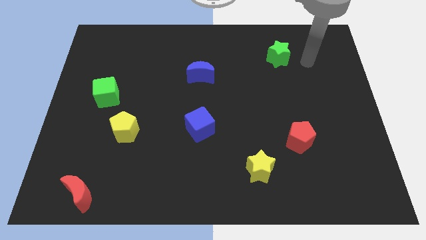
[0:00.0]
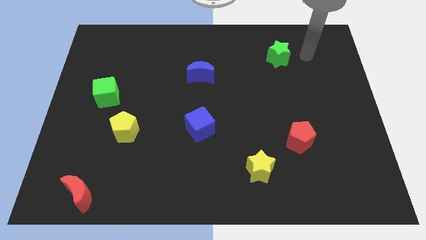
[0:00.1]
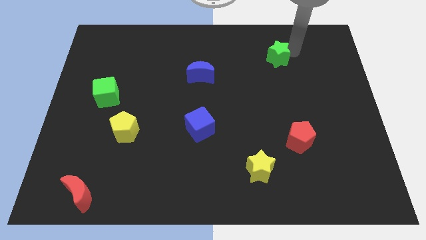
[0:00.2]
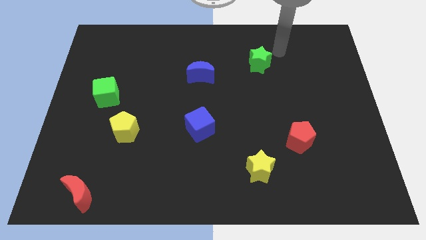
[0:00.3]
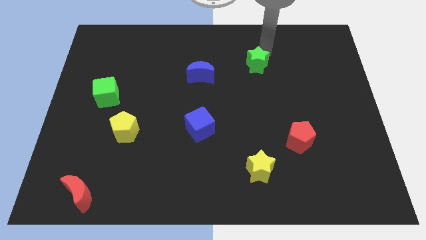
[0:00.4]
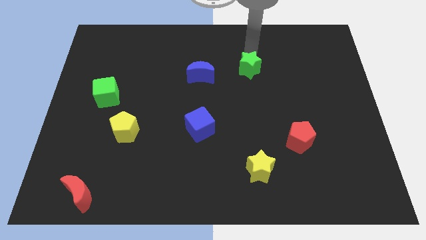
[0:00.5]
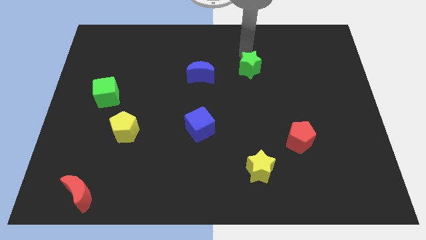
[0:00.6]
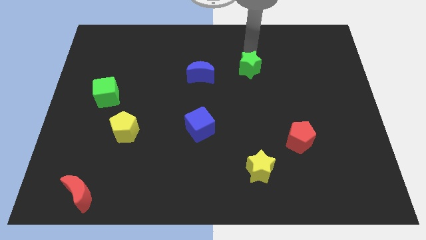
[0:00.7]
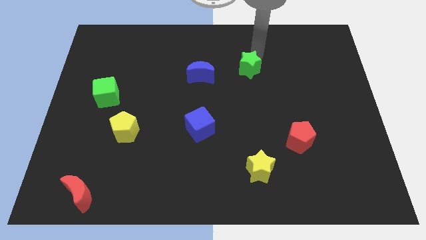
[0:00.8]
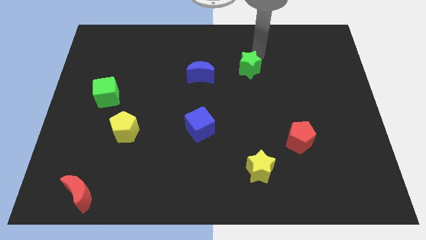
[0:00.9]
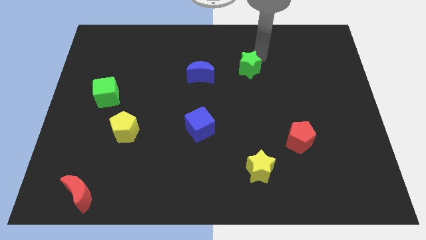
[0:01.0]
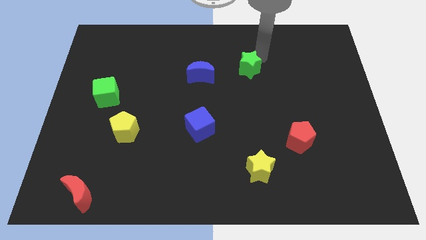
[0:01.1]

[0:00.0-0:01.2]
move green star slightly left

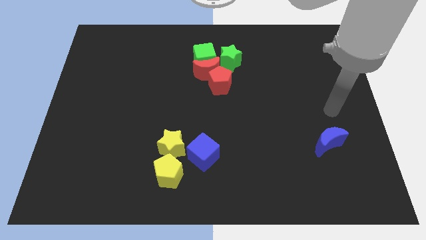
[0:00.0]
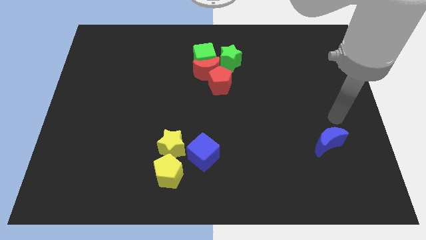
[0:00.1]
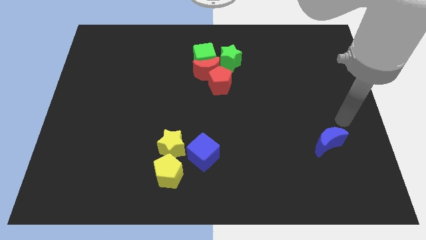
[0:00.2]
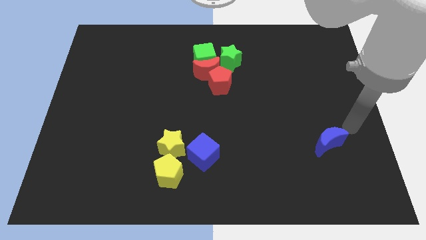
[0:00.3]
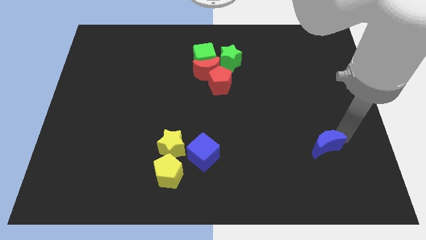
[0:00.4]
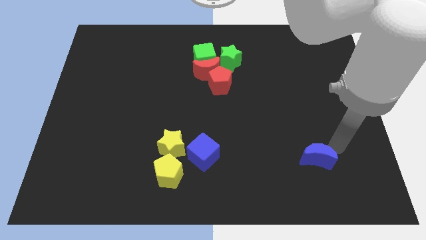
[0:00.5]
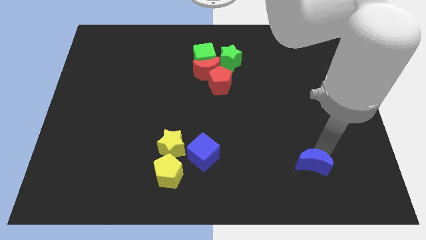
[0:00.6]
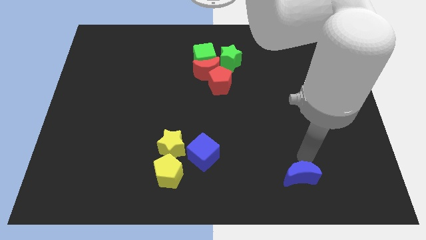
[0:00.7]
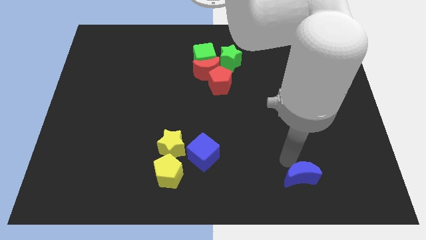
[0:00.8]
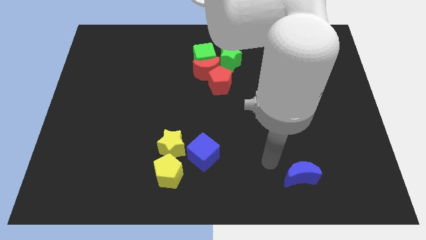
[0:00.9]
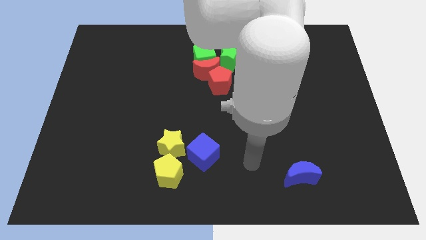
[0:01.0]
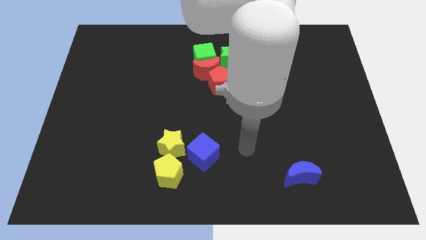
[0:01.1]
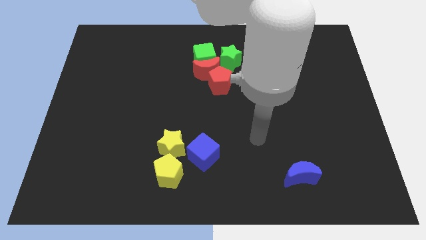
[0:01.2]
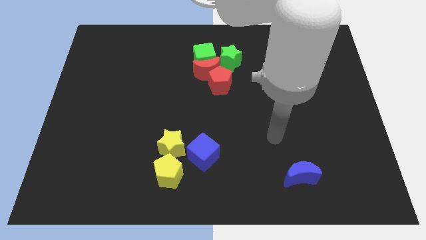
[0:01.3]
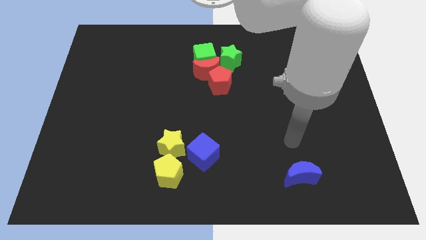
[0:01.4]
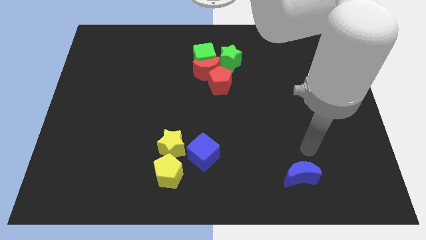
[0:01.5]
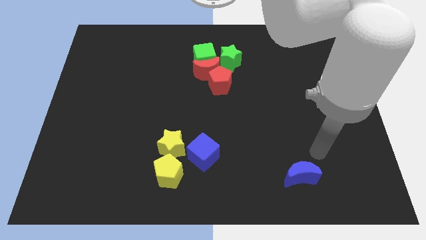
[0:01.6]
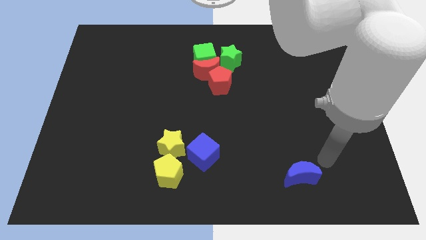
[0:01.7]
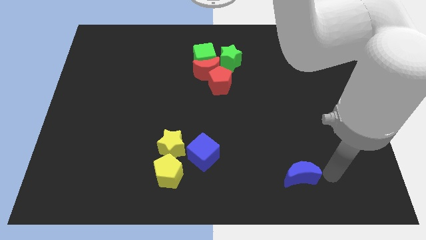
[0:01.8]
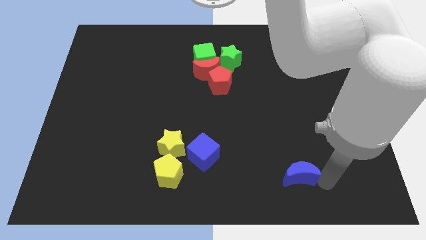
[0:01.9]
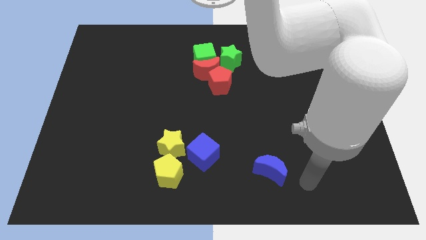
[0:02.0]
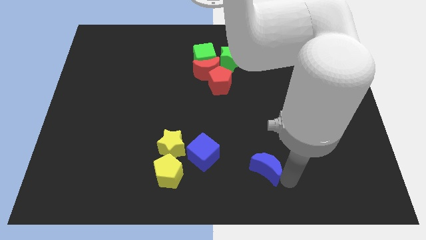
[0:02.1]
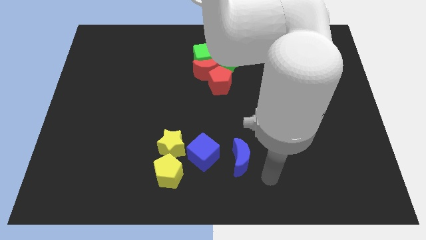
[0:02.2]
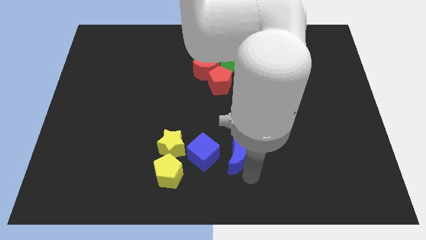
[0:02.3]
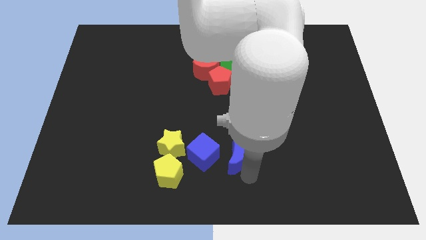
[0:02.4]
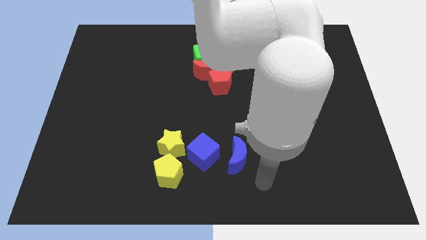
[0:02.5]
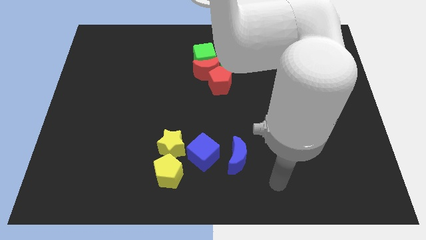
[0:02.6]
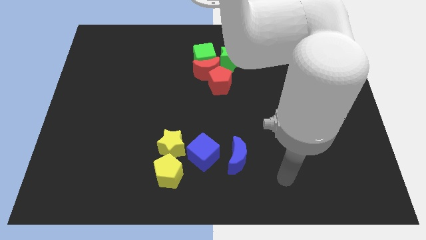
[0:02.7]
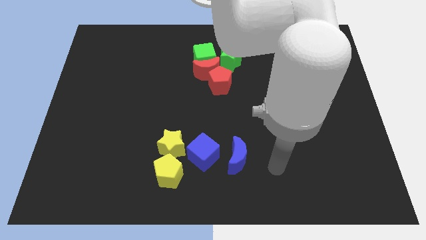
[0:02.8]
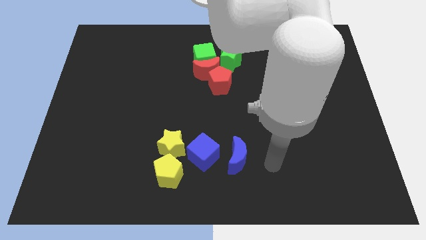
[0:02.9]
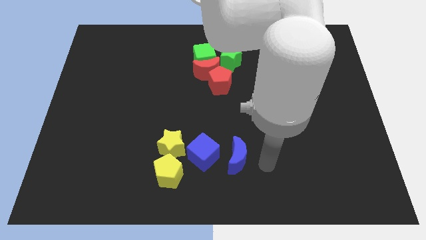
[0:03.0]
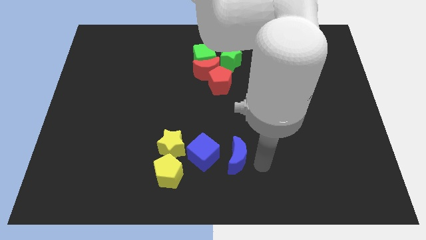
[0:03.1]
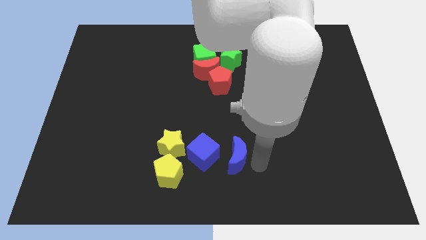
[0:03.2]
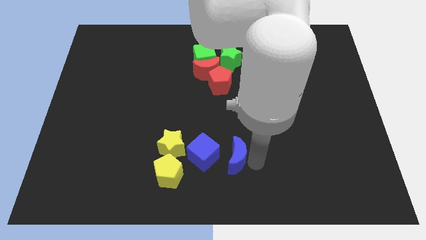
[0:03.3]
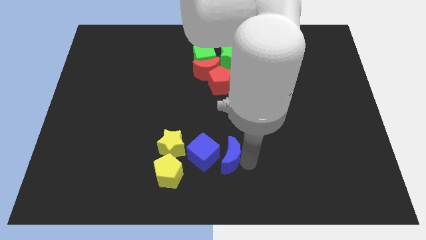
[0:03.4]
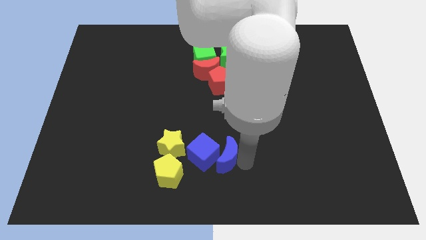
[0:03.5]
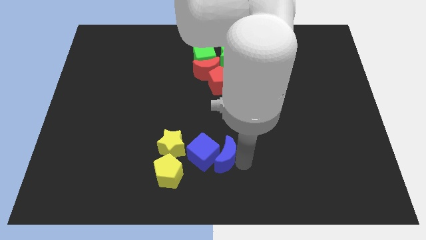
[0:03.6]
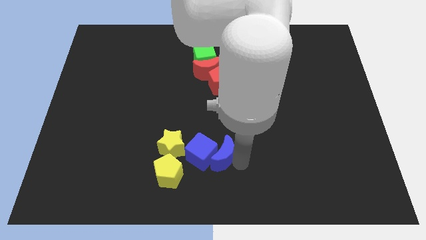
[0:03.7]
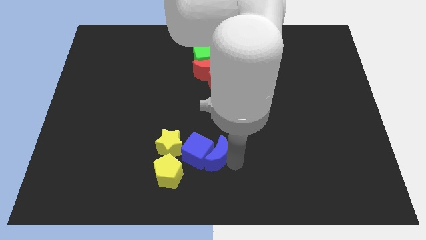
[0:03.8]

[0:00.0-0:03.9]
push the blue crescent into the blue cube

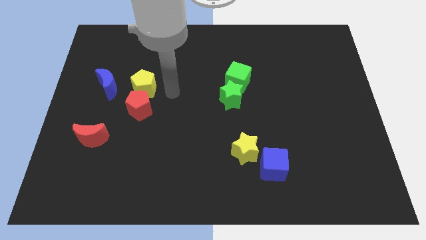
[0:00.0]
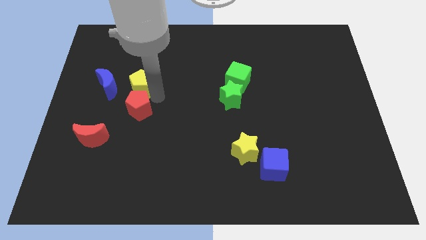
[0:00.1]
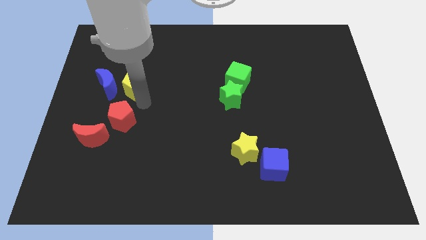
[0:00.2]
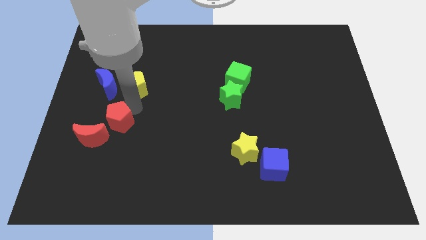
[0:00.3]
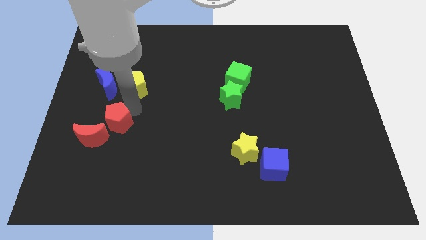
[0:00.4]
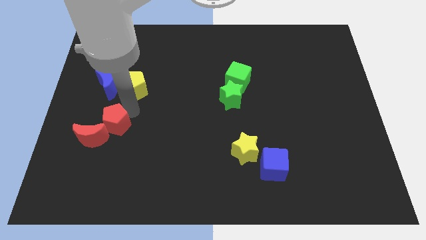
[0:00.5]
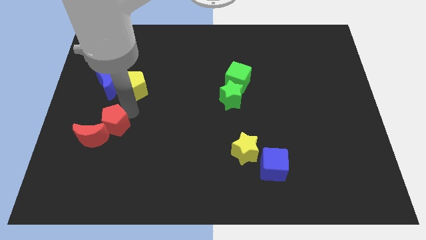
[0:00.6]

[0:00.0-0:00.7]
separate the yellow and red penatgons

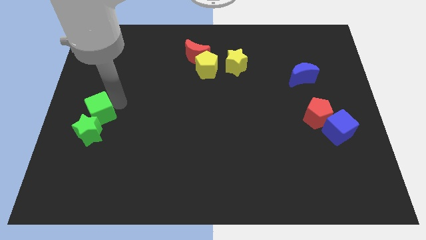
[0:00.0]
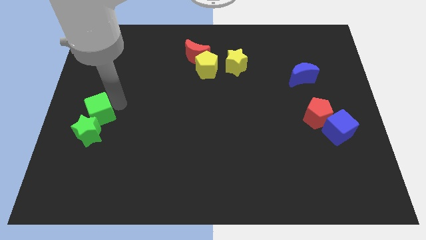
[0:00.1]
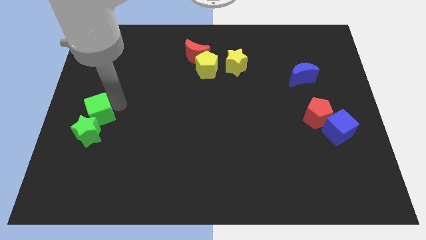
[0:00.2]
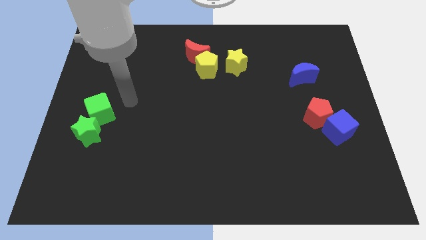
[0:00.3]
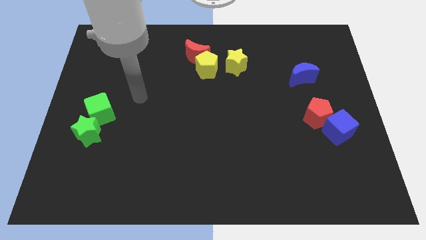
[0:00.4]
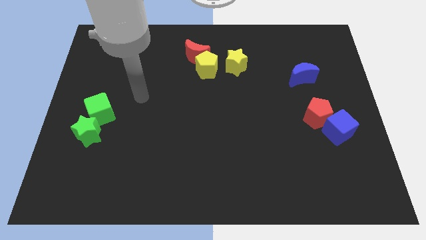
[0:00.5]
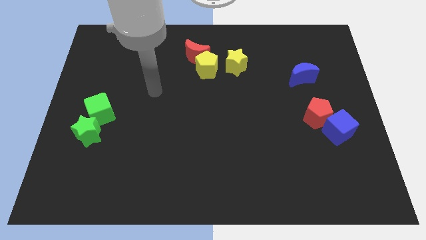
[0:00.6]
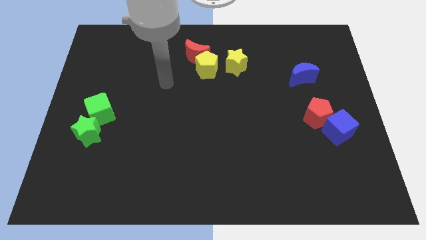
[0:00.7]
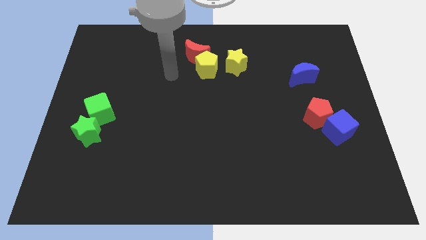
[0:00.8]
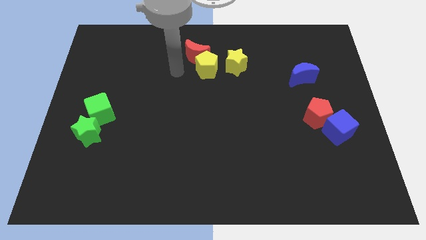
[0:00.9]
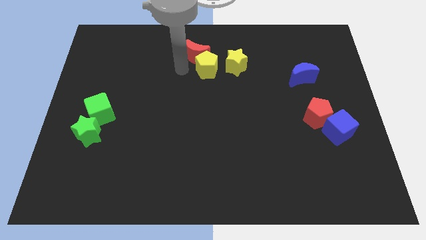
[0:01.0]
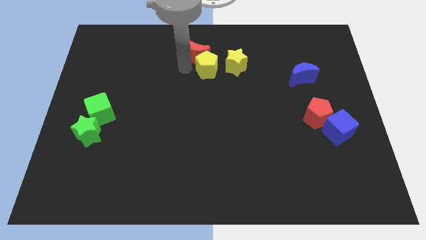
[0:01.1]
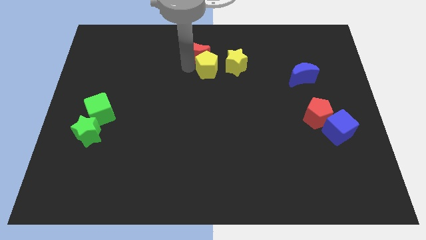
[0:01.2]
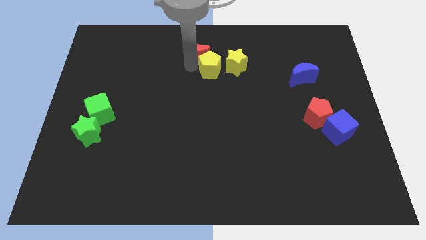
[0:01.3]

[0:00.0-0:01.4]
move your arm away from the green cube

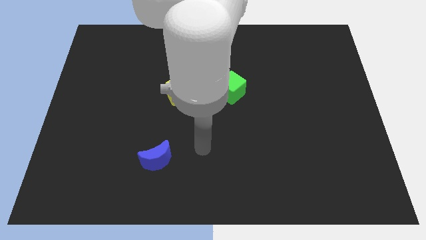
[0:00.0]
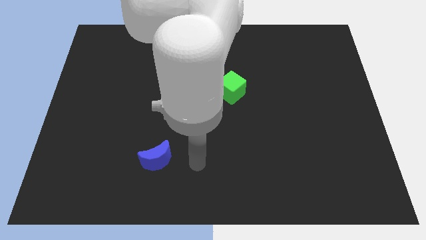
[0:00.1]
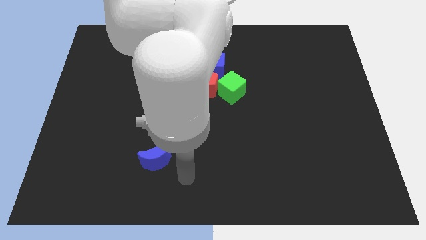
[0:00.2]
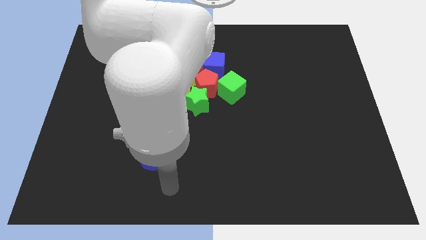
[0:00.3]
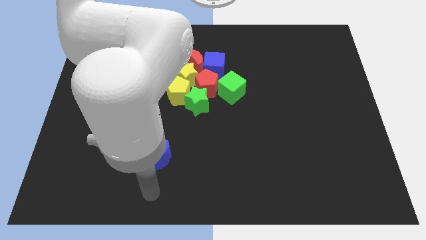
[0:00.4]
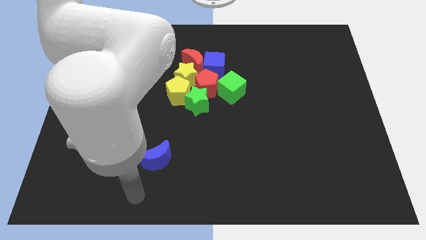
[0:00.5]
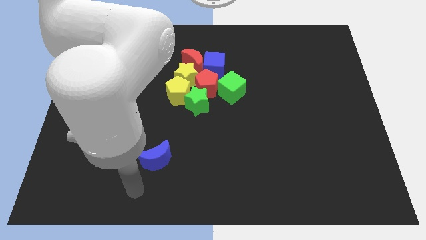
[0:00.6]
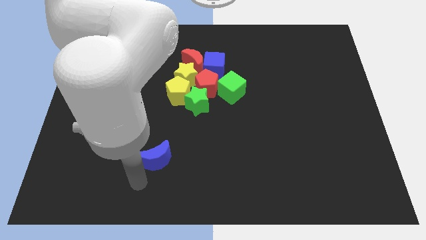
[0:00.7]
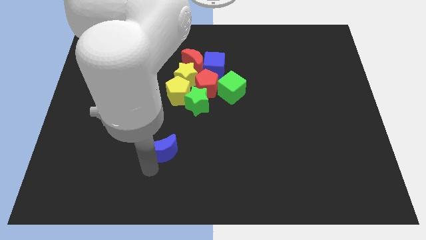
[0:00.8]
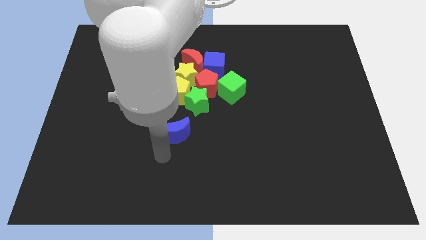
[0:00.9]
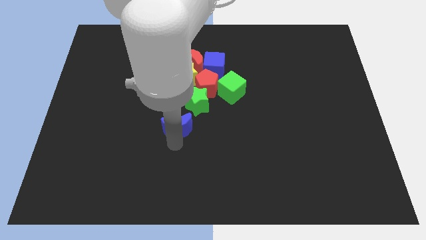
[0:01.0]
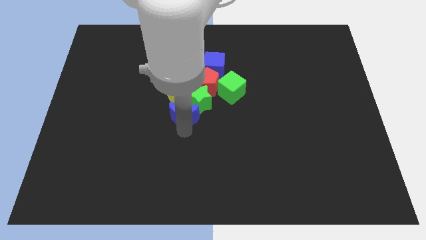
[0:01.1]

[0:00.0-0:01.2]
push blue crescent into the group of blocks

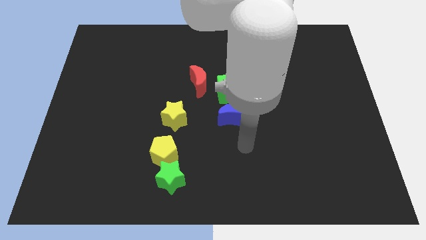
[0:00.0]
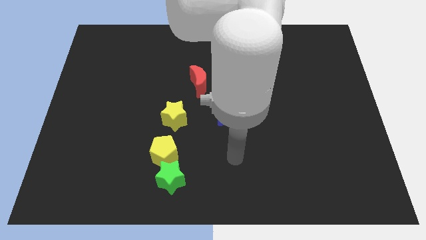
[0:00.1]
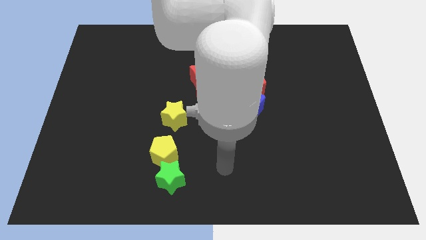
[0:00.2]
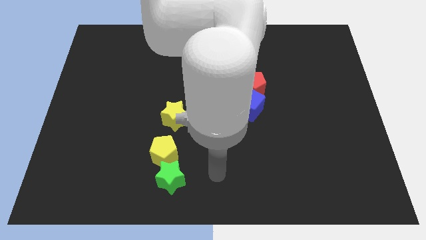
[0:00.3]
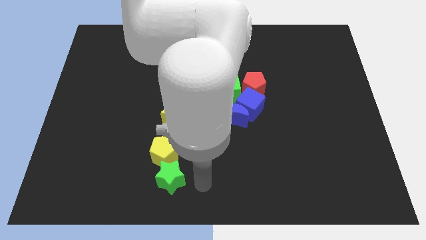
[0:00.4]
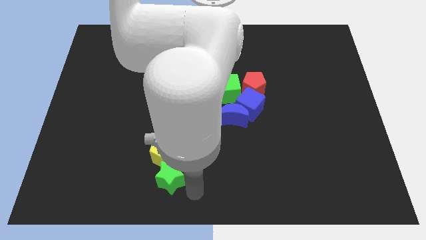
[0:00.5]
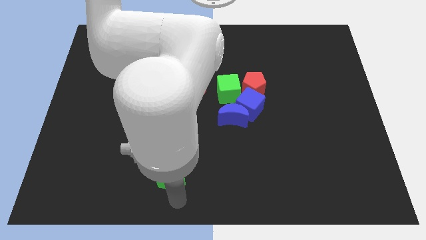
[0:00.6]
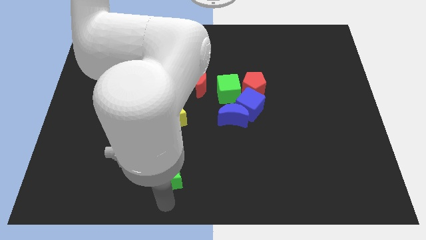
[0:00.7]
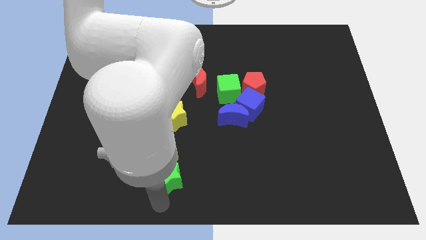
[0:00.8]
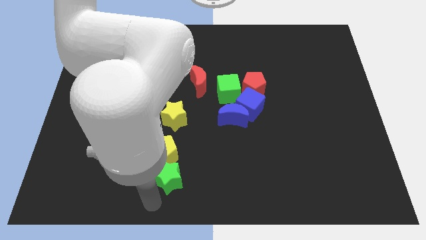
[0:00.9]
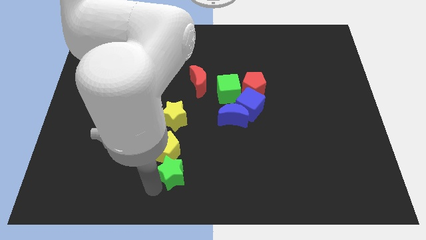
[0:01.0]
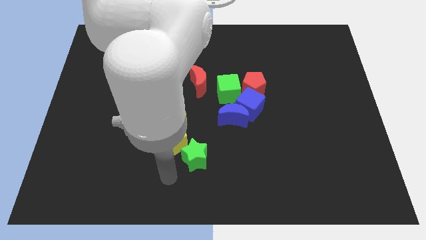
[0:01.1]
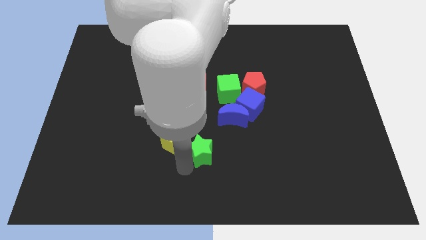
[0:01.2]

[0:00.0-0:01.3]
push the green star up slightly
